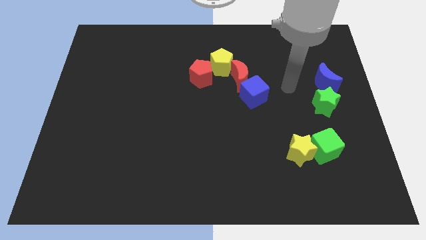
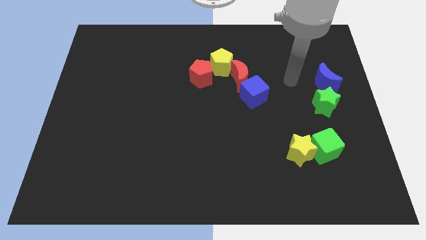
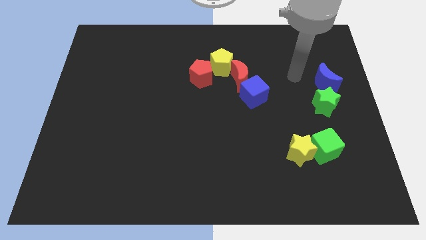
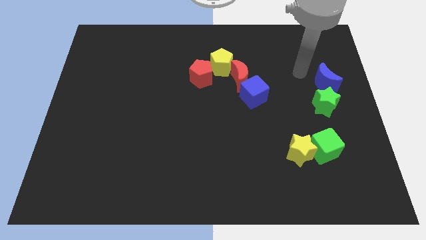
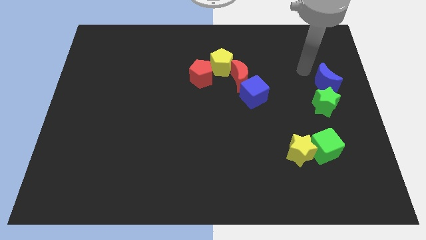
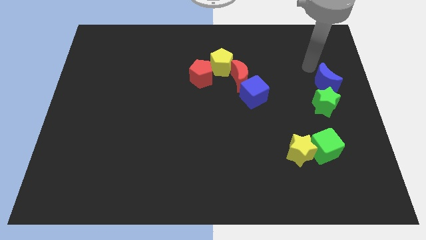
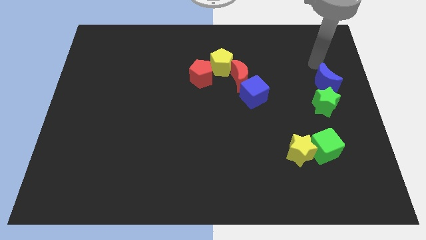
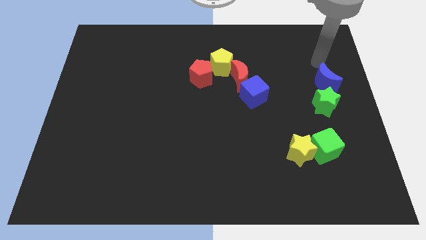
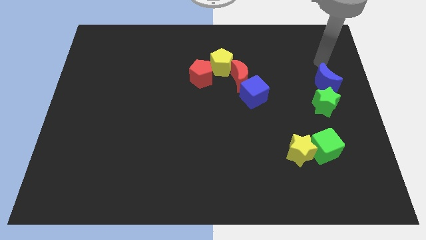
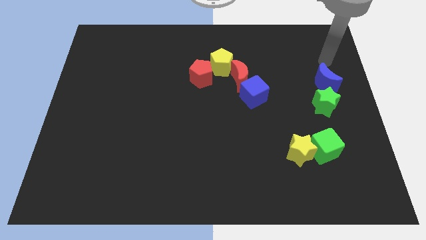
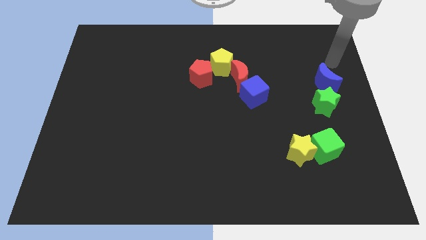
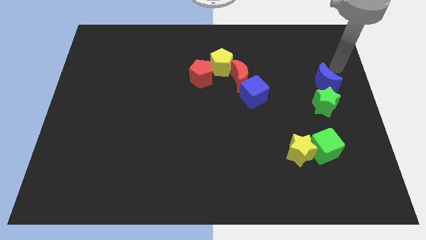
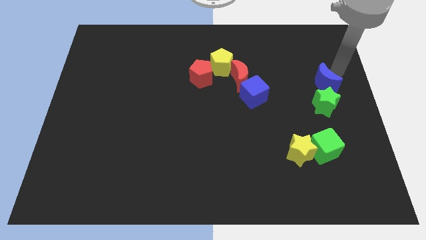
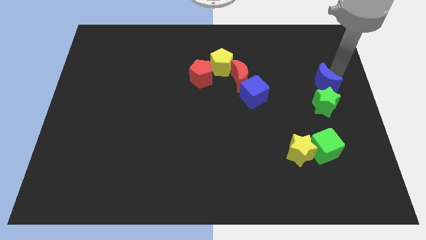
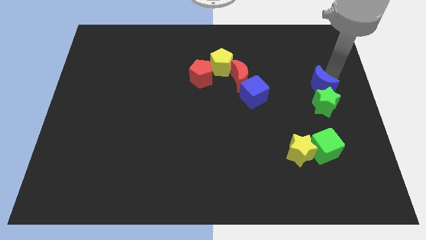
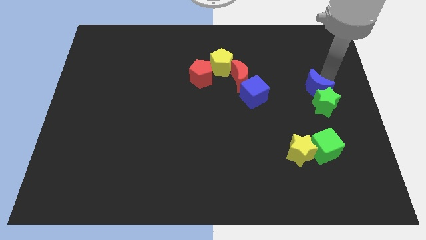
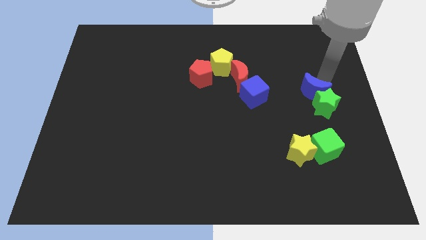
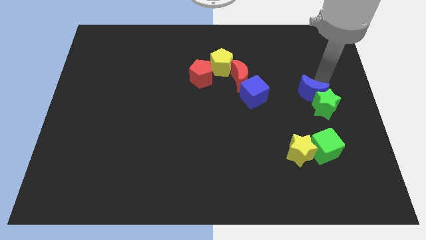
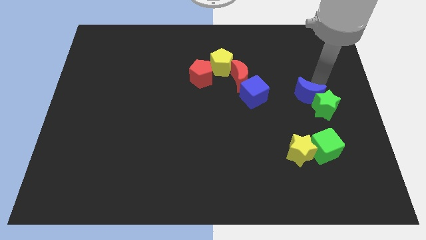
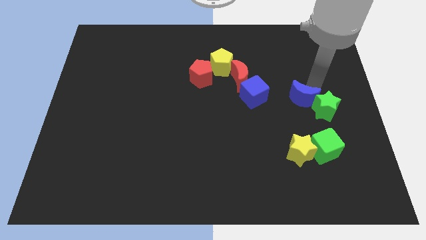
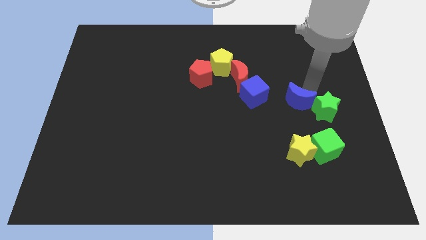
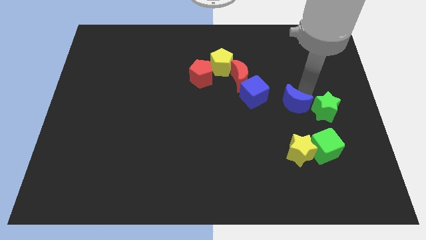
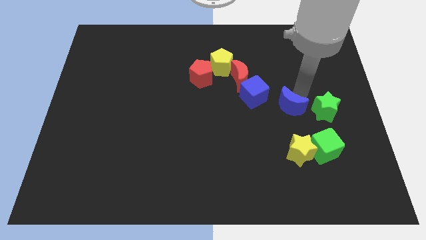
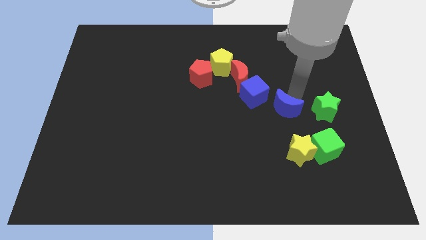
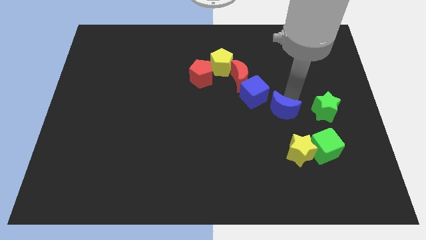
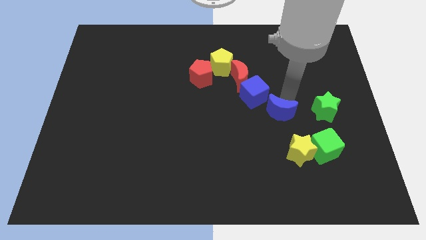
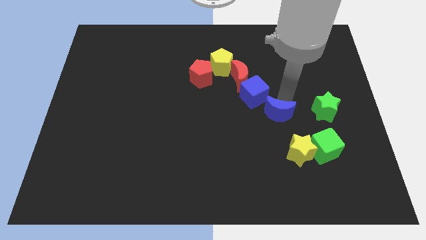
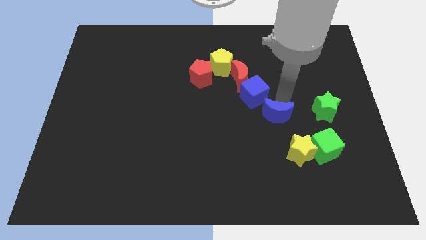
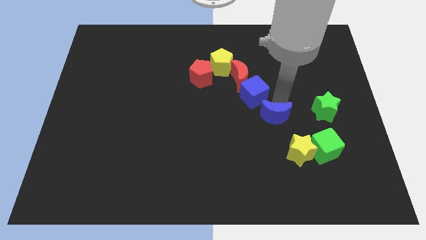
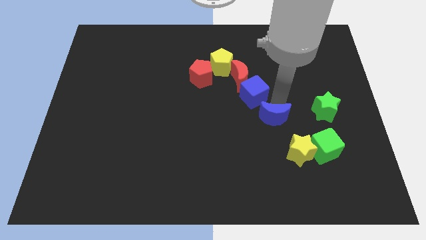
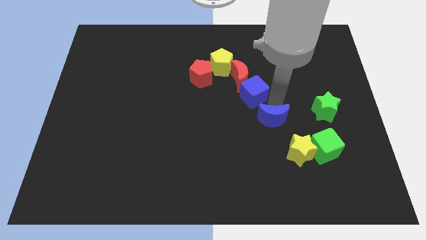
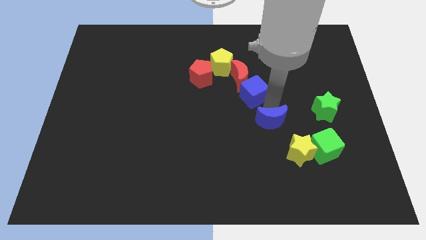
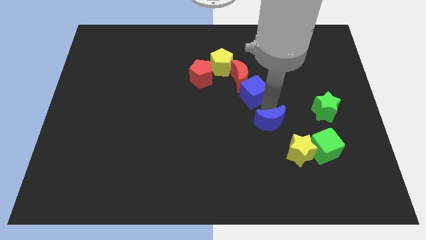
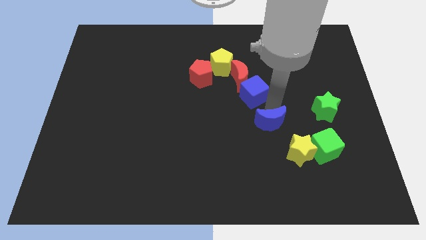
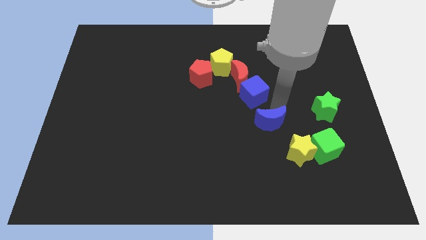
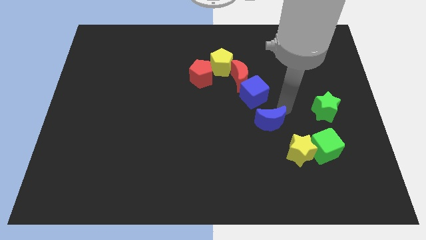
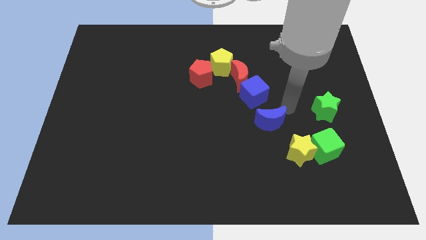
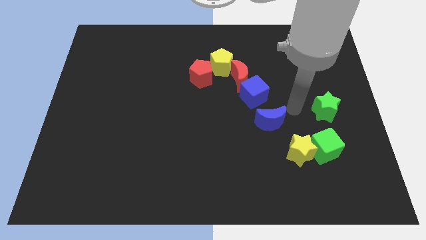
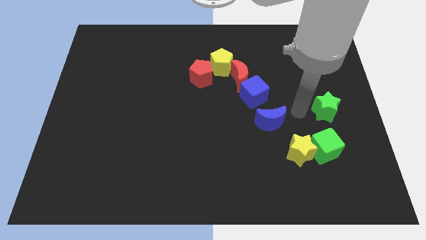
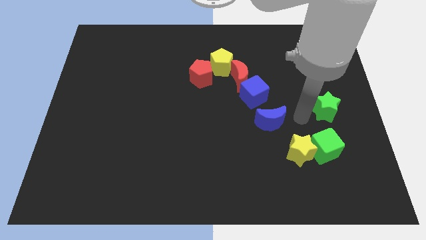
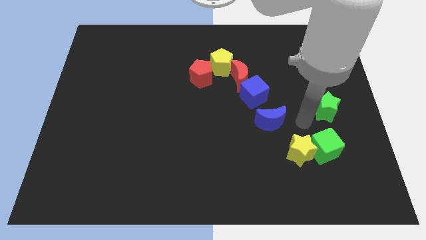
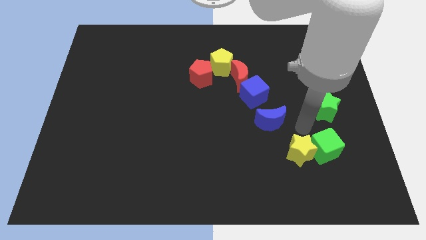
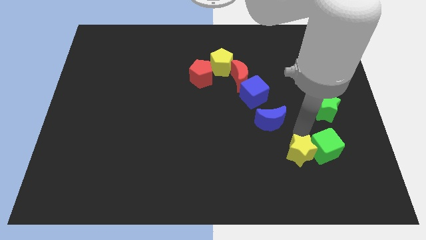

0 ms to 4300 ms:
move the blue moon underneath the blue cube

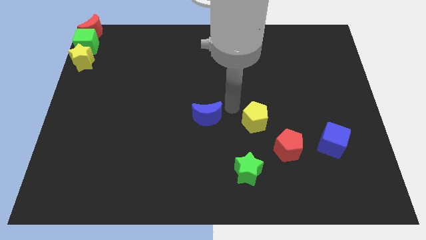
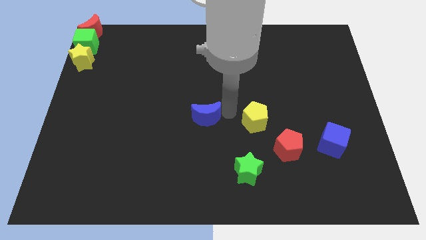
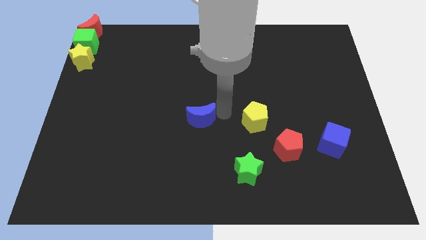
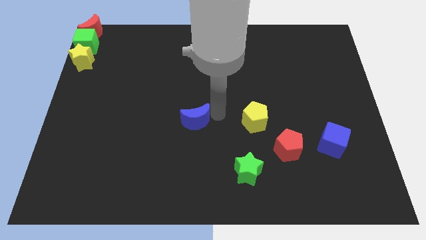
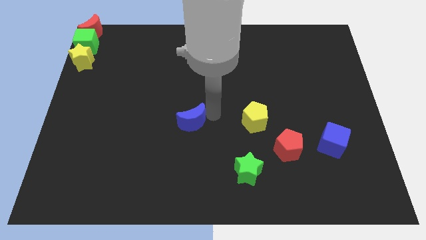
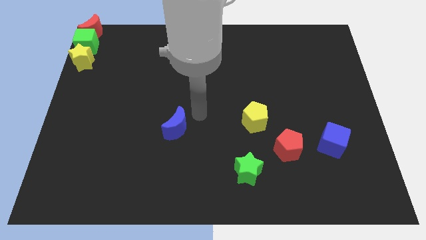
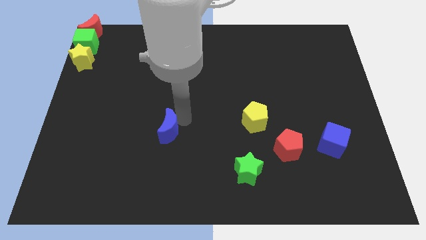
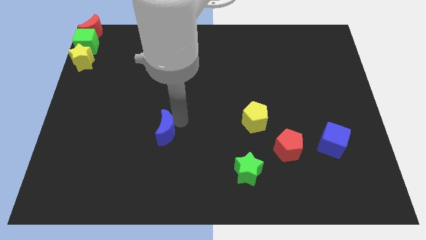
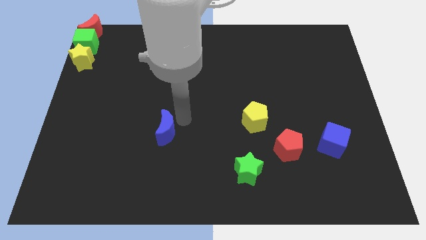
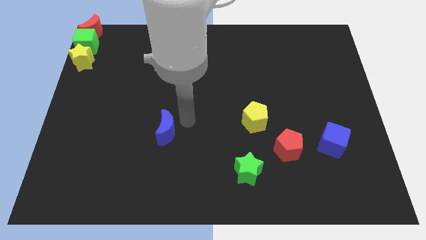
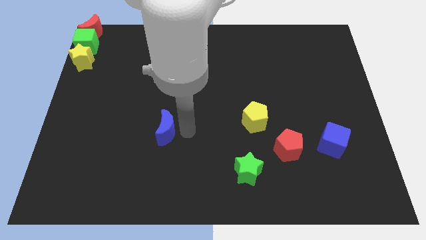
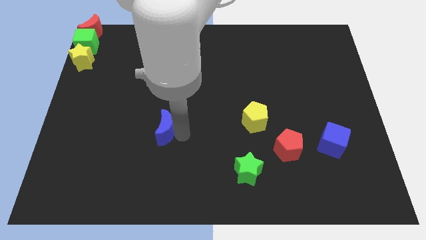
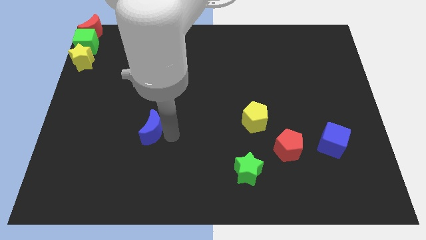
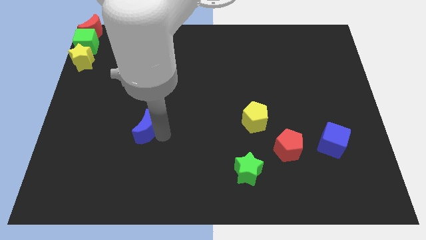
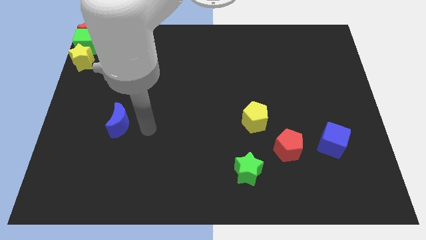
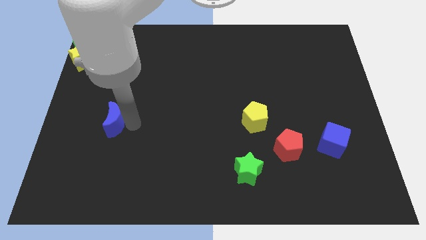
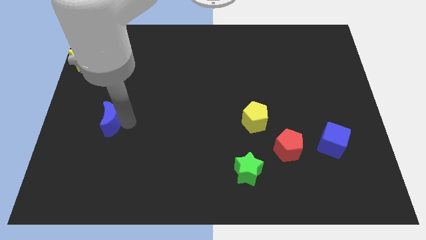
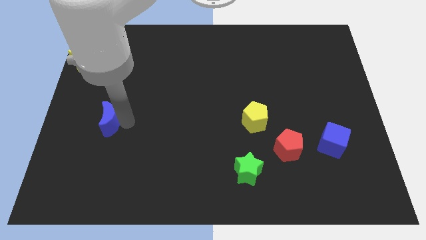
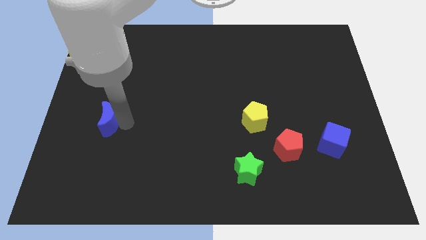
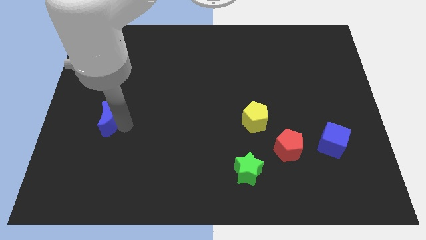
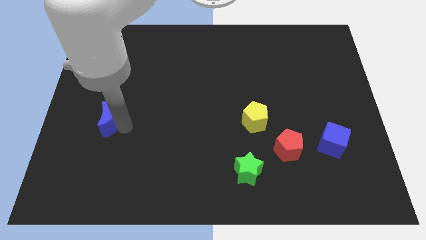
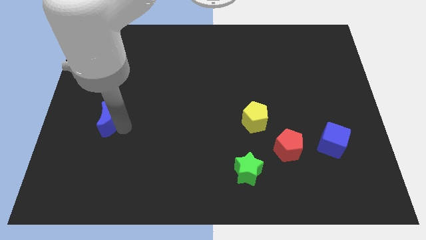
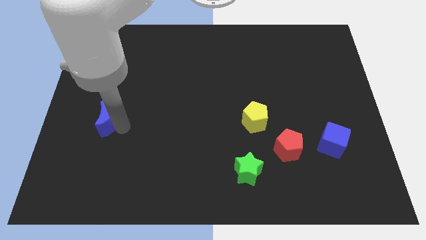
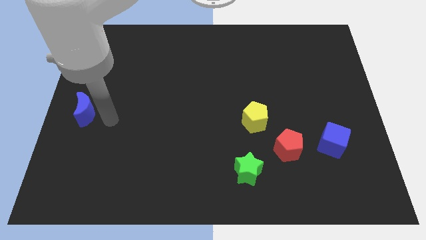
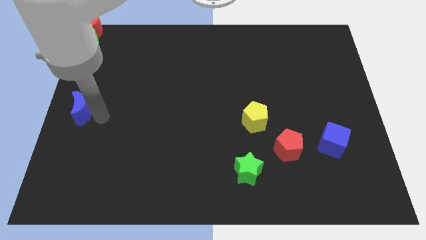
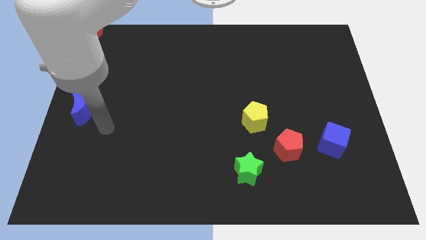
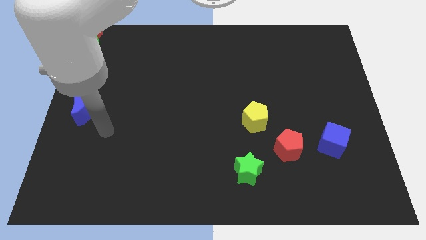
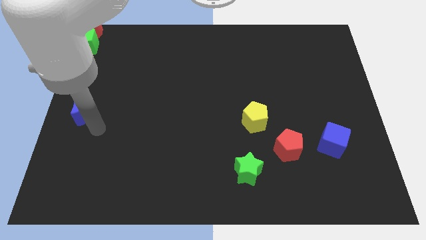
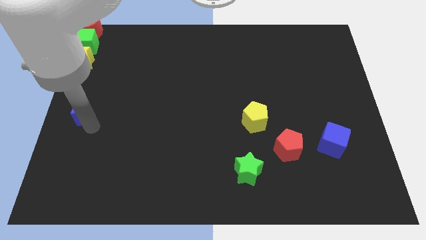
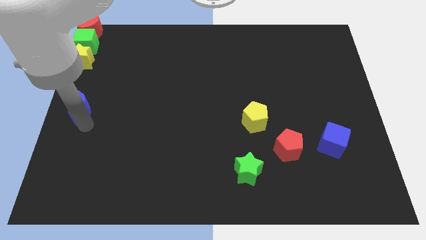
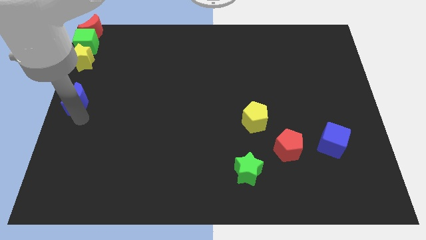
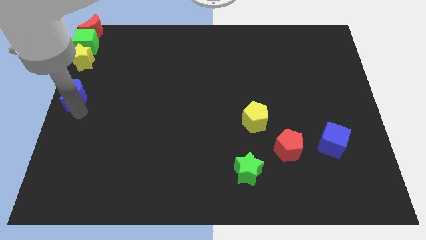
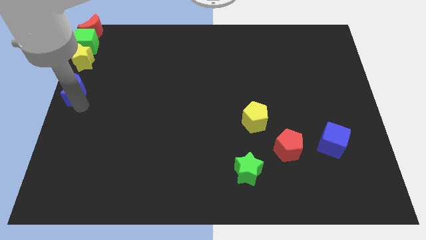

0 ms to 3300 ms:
move the blue moon to the center left of the board

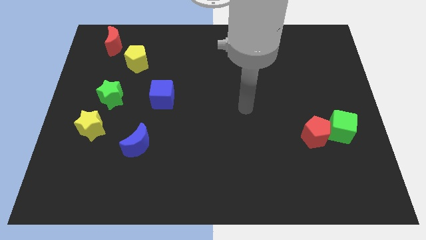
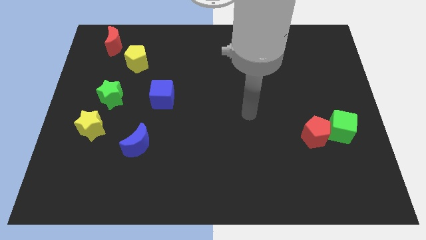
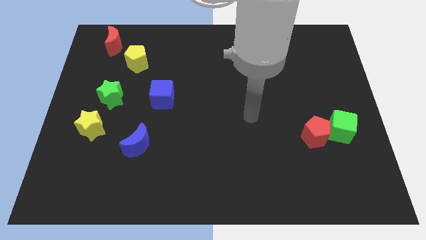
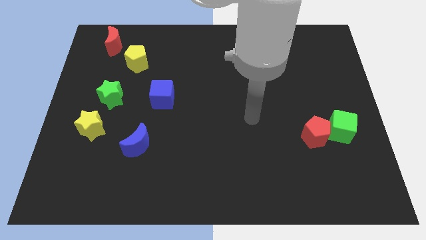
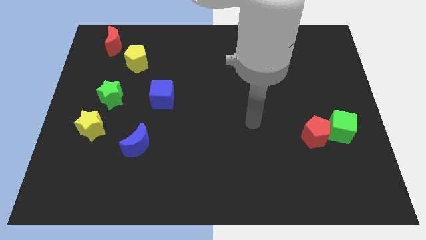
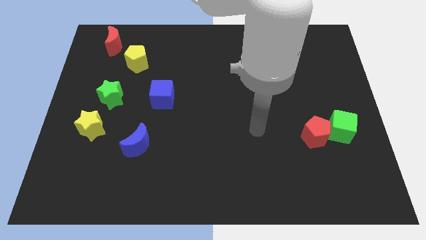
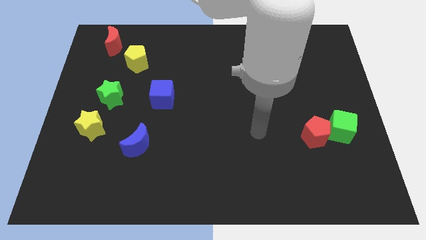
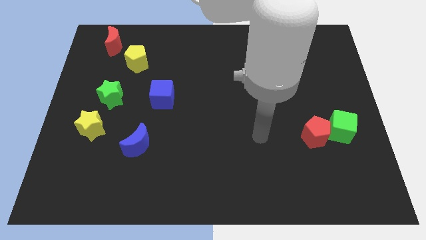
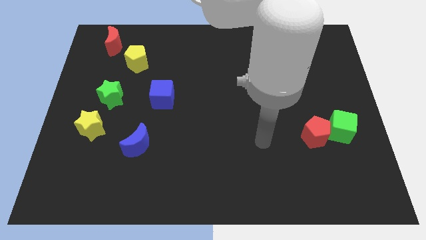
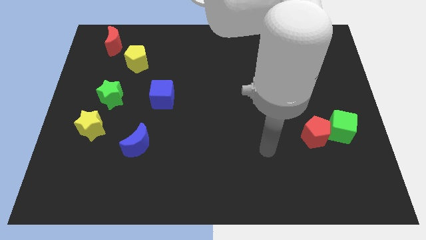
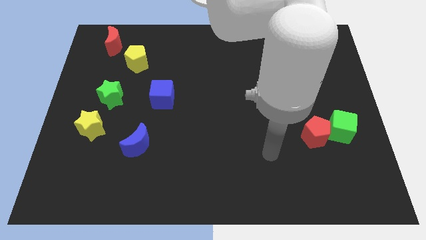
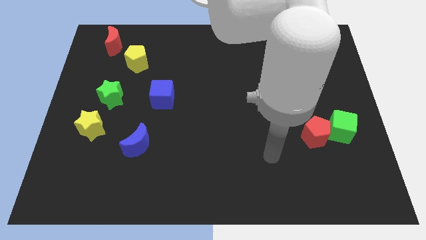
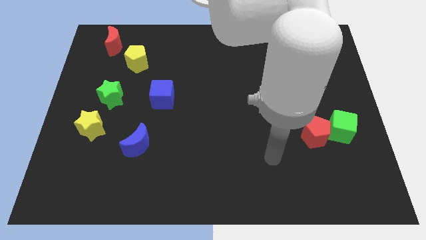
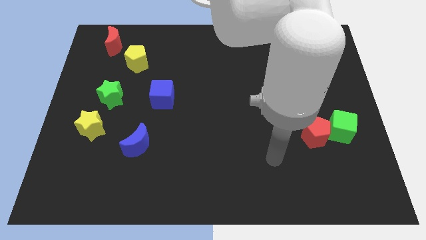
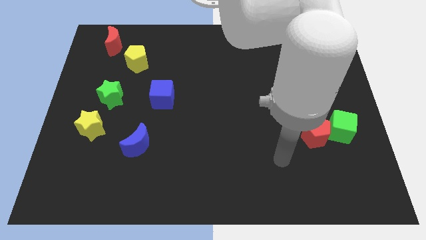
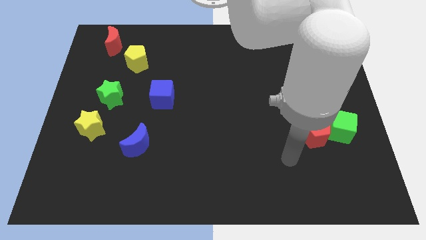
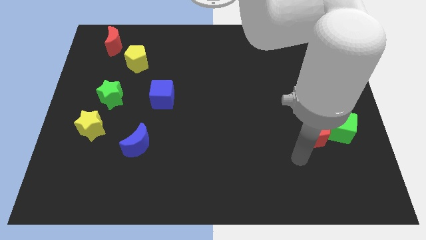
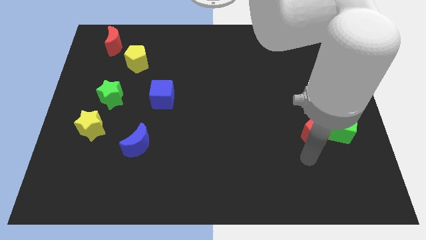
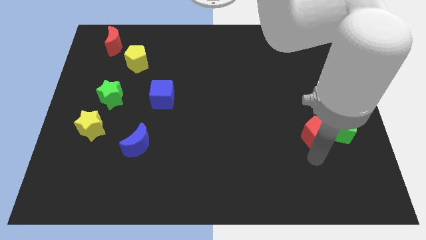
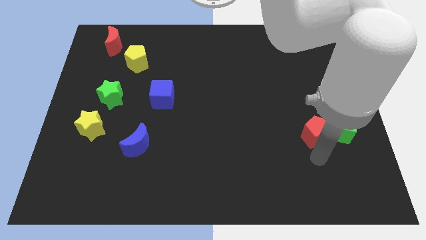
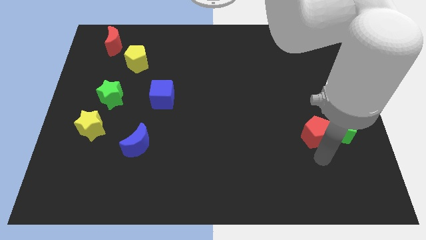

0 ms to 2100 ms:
move your arm to the bottom side of the red pentagon
